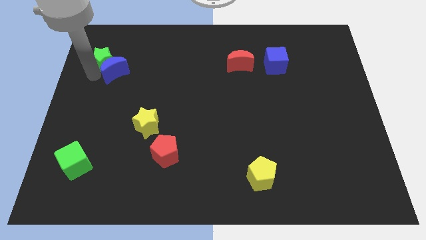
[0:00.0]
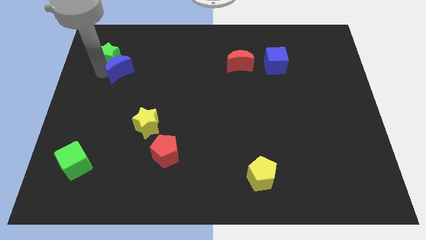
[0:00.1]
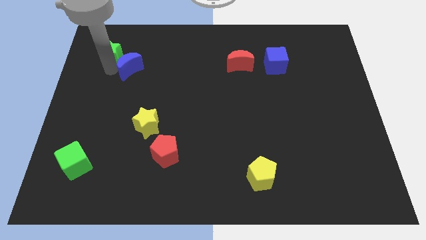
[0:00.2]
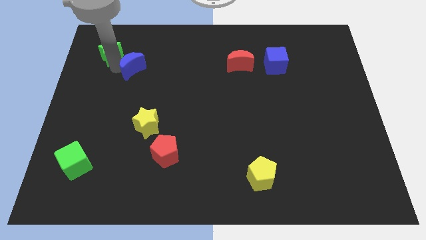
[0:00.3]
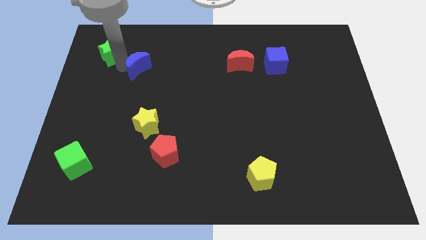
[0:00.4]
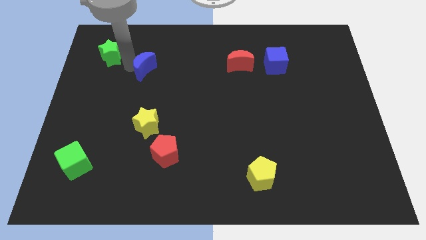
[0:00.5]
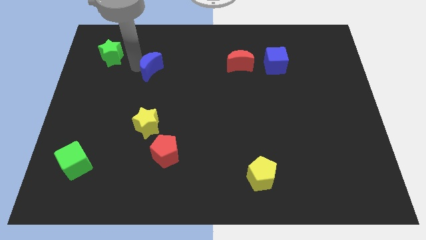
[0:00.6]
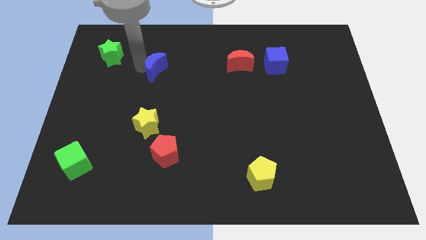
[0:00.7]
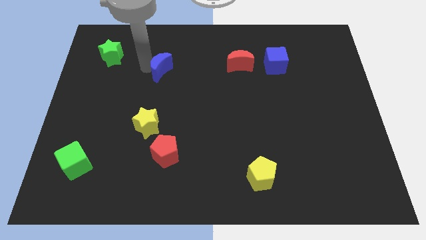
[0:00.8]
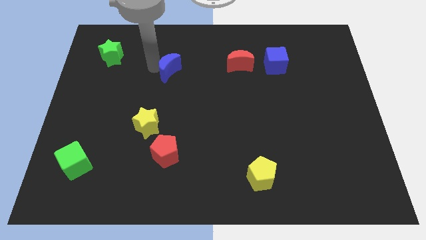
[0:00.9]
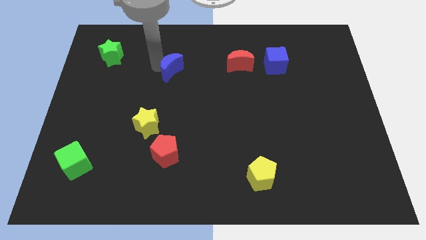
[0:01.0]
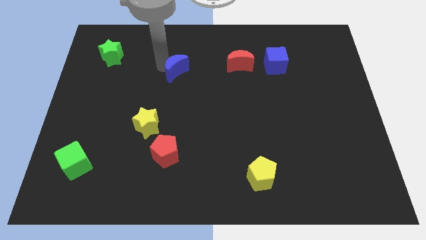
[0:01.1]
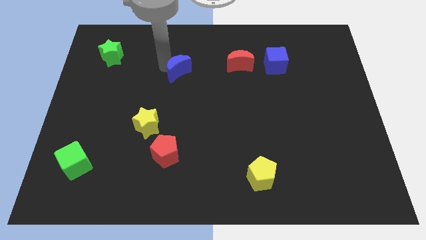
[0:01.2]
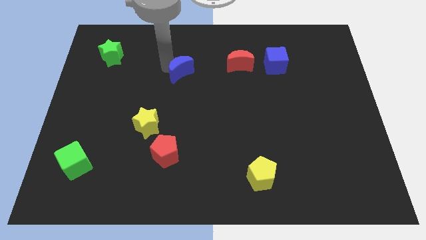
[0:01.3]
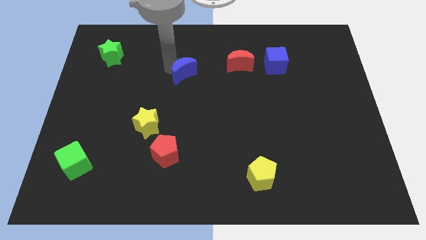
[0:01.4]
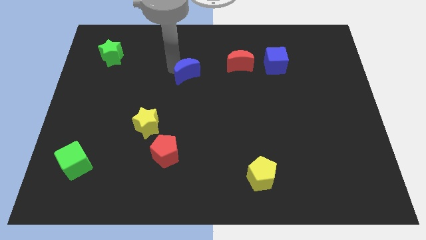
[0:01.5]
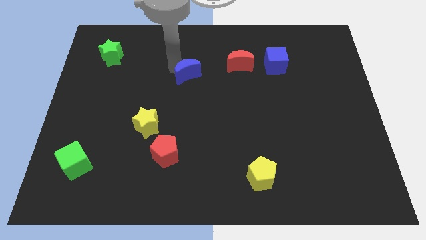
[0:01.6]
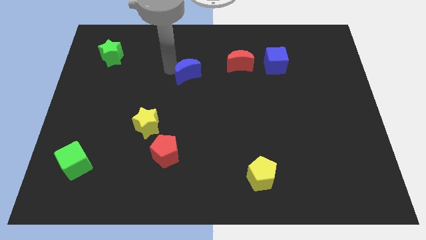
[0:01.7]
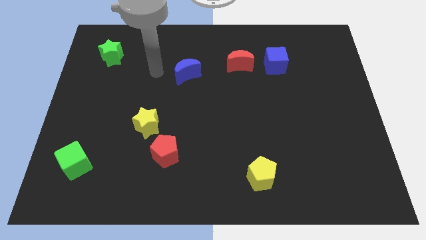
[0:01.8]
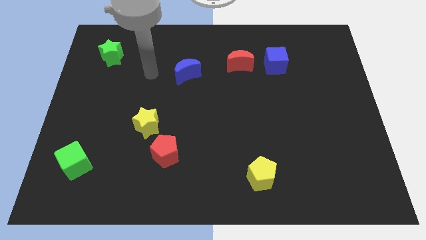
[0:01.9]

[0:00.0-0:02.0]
push the blue crescent diagonal to the yellow star

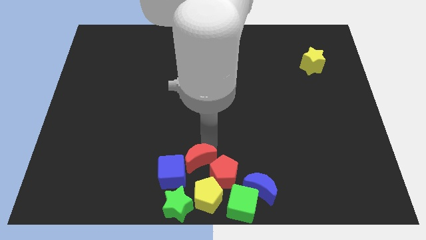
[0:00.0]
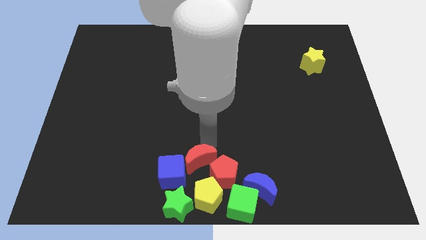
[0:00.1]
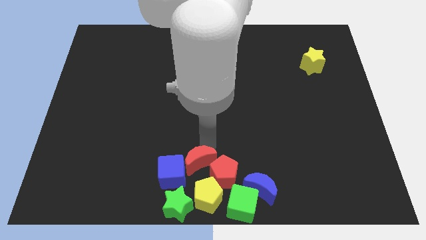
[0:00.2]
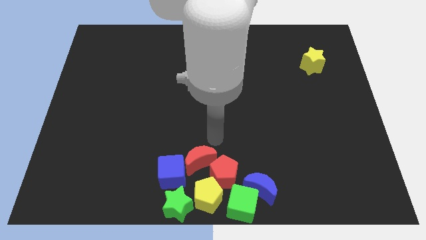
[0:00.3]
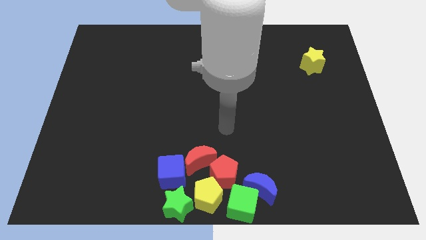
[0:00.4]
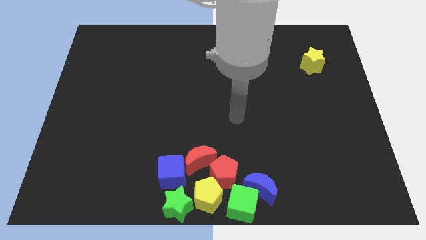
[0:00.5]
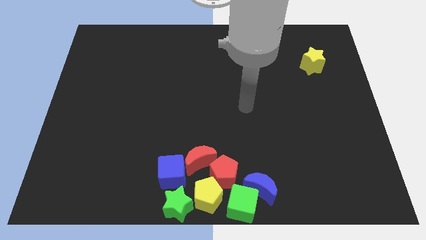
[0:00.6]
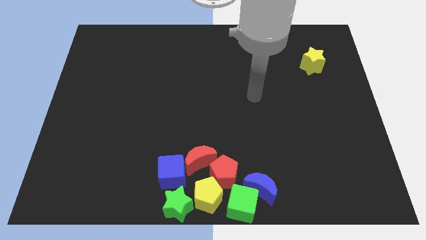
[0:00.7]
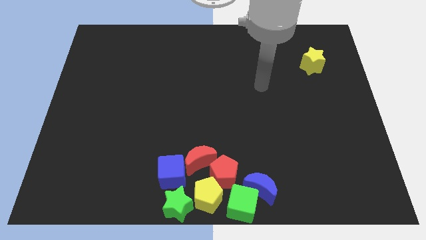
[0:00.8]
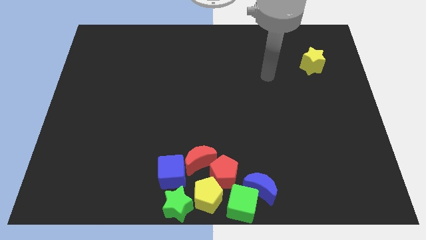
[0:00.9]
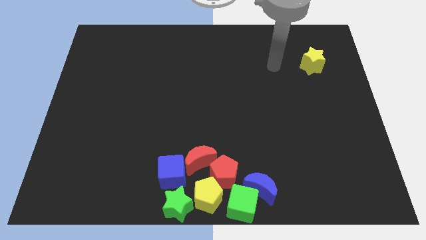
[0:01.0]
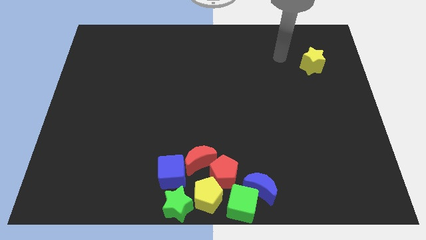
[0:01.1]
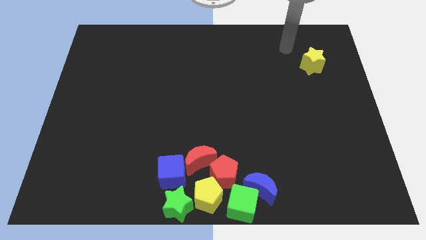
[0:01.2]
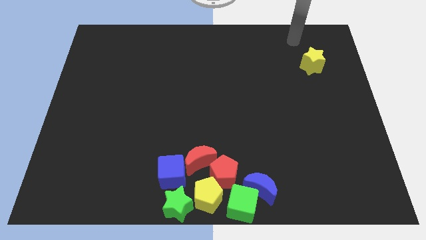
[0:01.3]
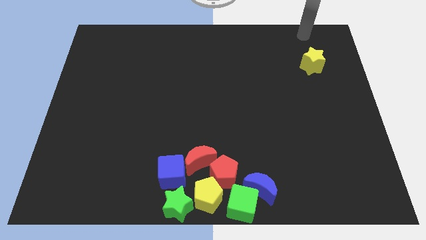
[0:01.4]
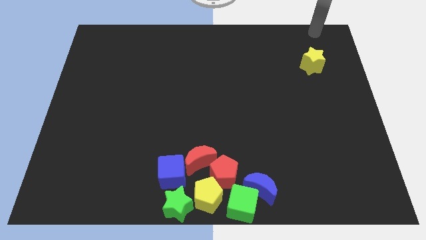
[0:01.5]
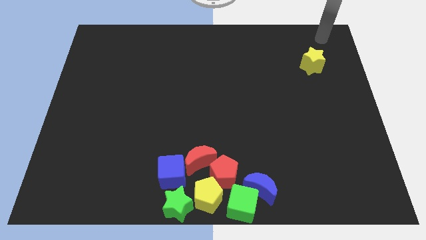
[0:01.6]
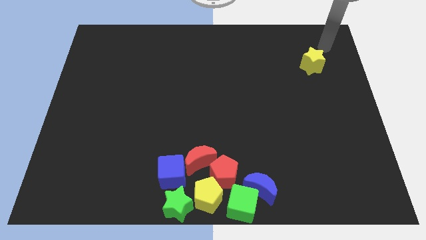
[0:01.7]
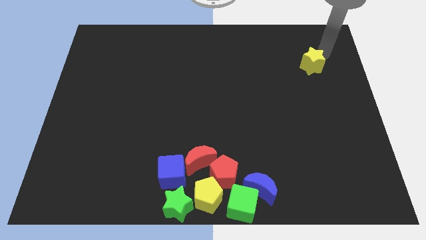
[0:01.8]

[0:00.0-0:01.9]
move your arm to the top of the yellow star

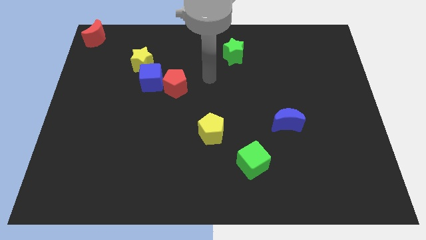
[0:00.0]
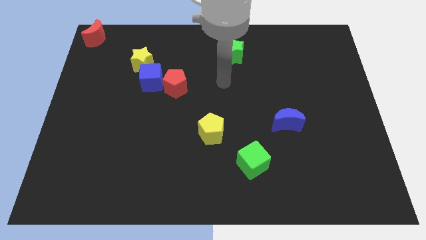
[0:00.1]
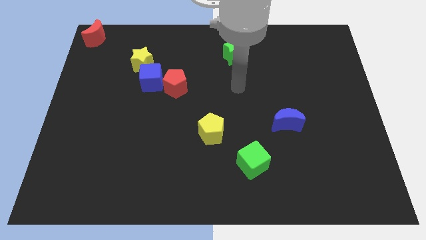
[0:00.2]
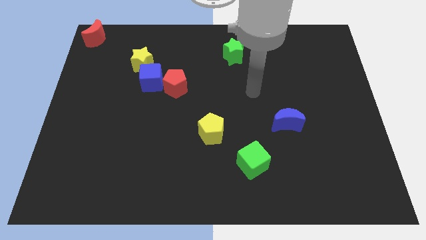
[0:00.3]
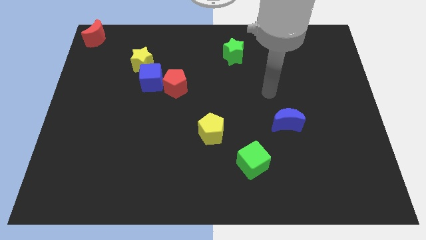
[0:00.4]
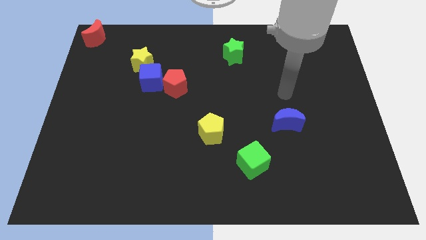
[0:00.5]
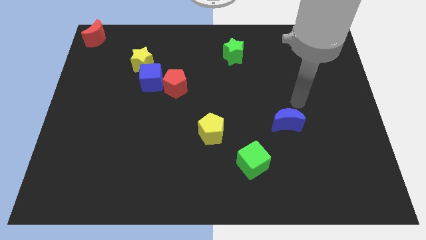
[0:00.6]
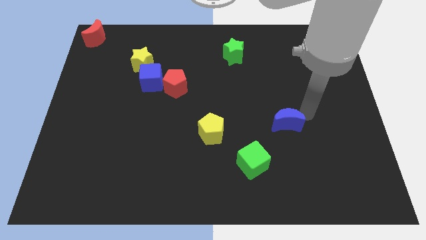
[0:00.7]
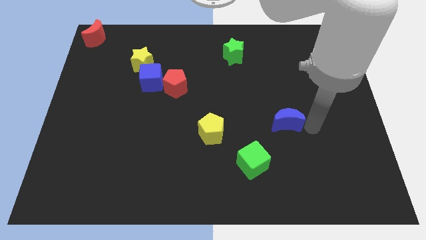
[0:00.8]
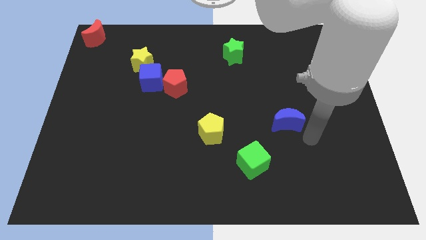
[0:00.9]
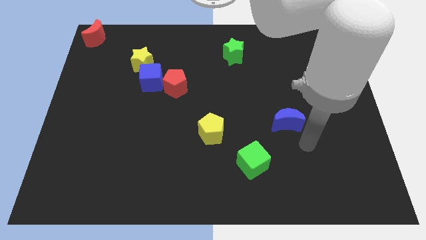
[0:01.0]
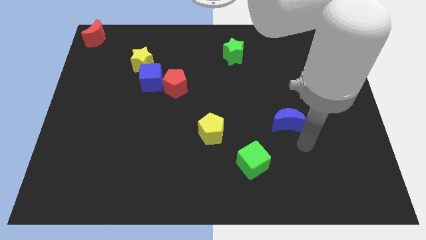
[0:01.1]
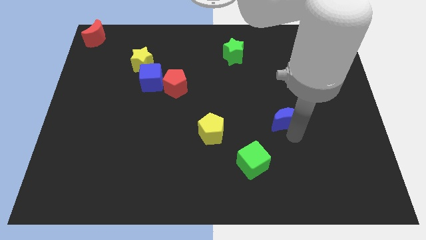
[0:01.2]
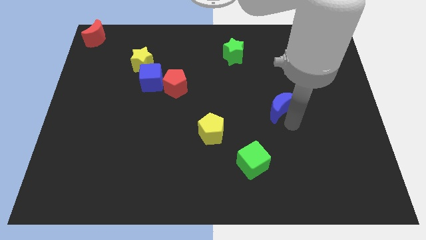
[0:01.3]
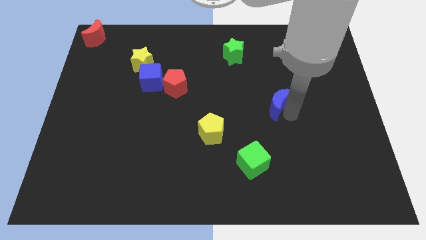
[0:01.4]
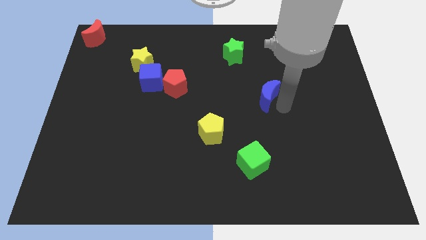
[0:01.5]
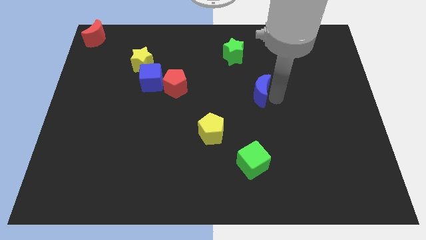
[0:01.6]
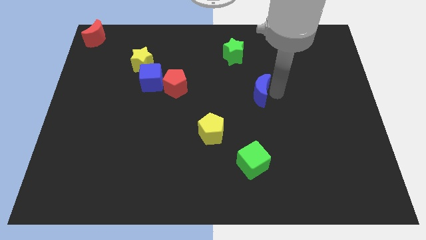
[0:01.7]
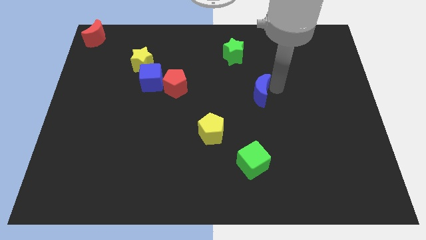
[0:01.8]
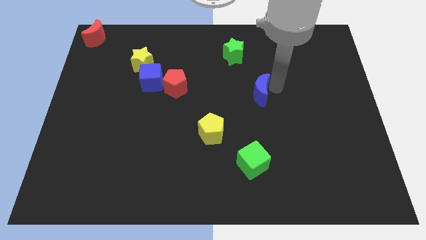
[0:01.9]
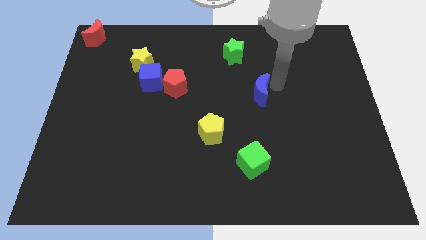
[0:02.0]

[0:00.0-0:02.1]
move the blue crescent upwards below the green star

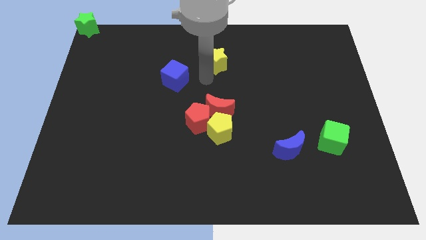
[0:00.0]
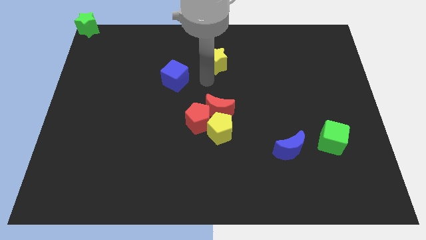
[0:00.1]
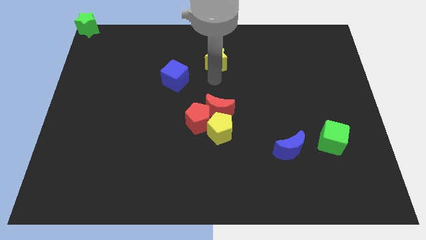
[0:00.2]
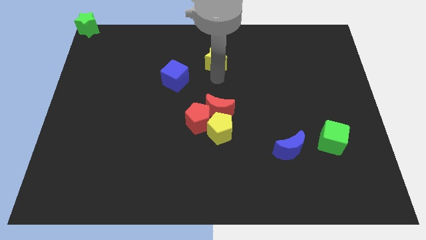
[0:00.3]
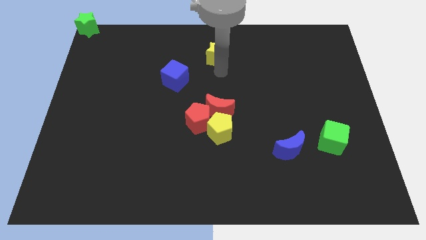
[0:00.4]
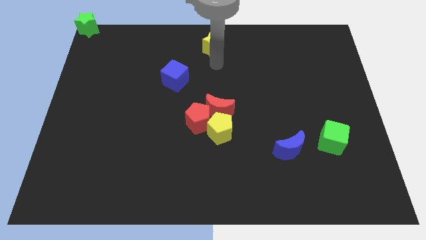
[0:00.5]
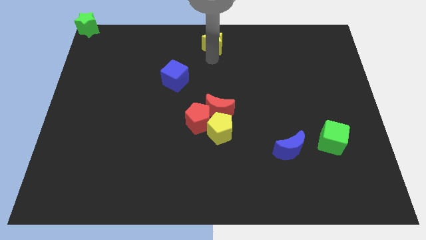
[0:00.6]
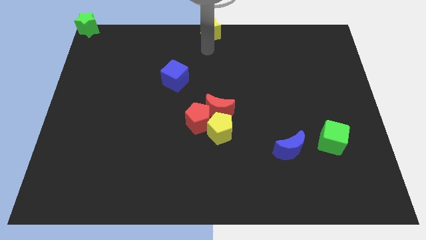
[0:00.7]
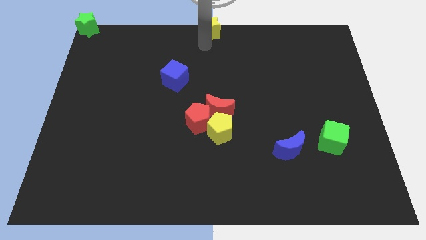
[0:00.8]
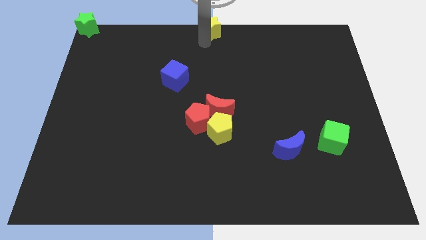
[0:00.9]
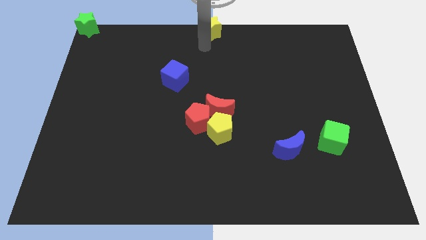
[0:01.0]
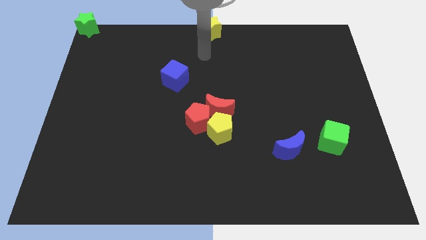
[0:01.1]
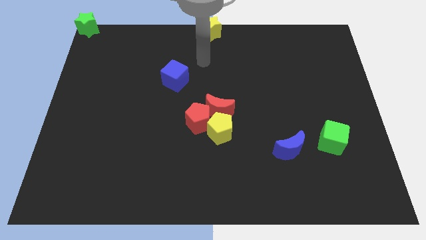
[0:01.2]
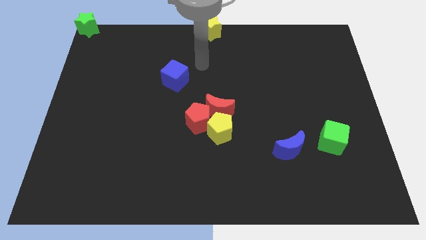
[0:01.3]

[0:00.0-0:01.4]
move the yellow star to the top center

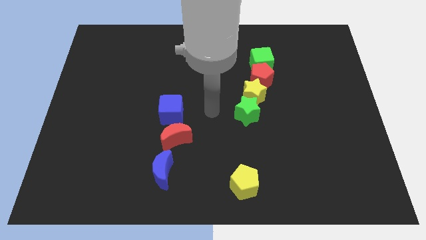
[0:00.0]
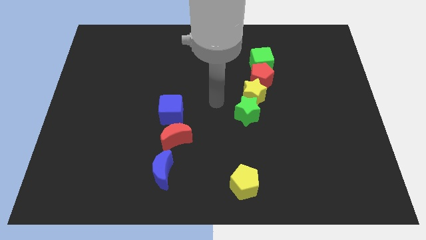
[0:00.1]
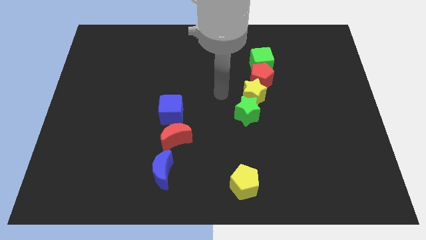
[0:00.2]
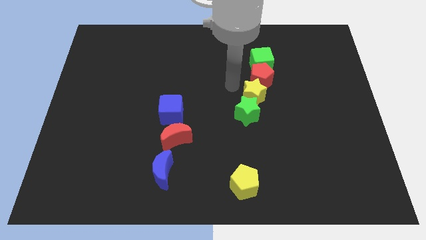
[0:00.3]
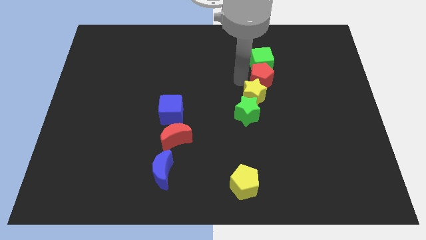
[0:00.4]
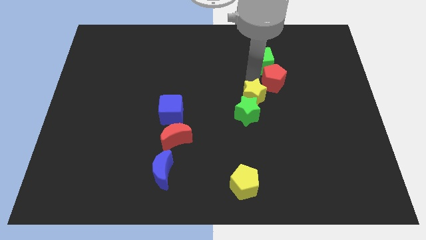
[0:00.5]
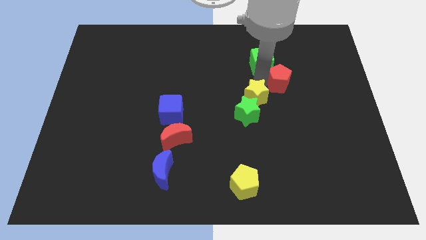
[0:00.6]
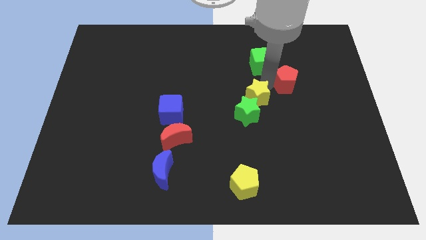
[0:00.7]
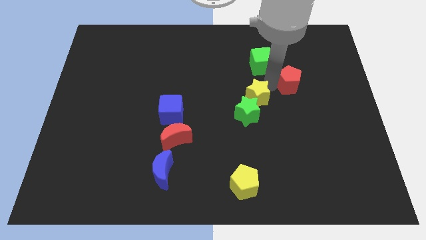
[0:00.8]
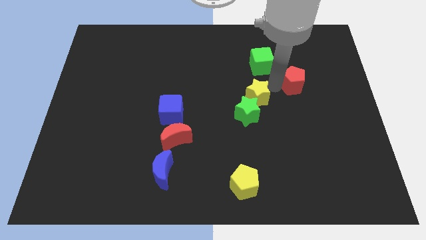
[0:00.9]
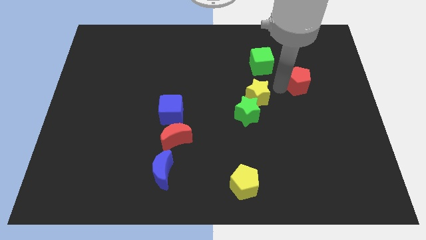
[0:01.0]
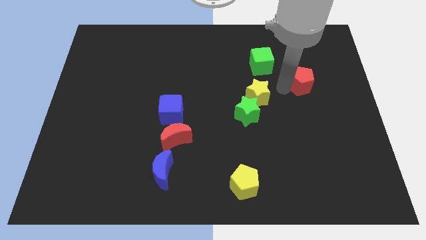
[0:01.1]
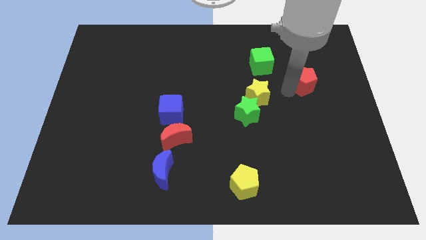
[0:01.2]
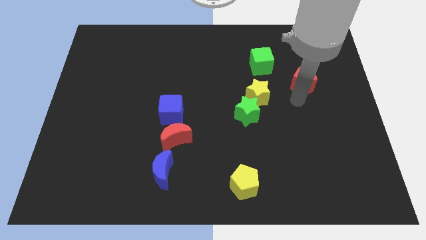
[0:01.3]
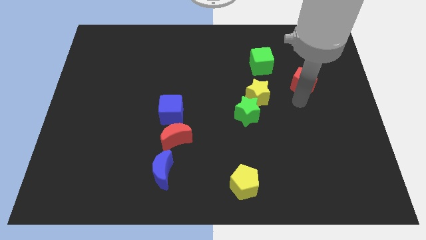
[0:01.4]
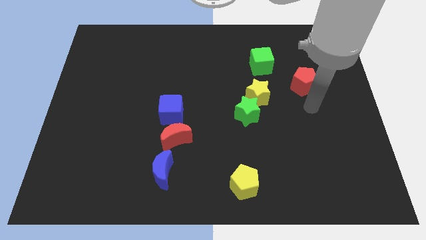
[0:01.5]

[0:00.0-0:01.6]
move the red pentagon away from the line of blocks
